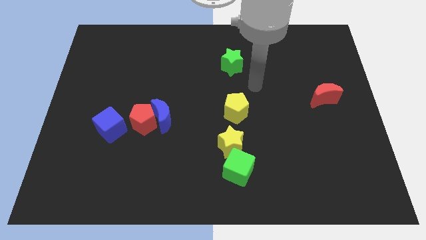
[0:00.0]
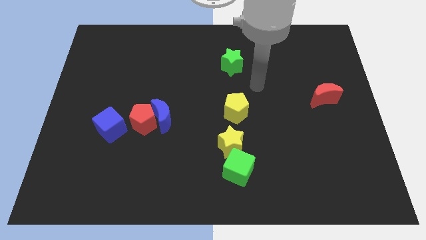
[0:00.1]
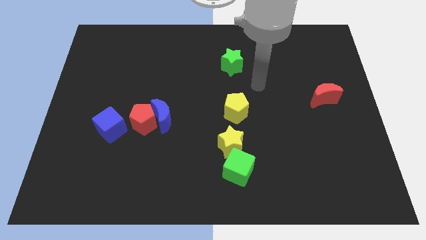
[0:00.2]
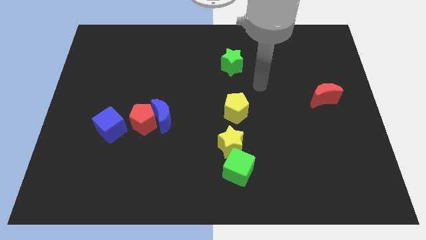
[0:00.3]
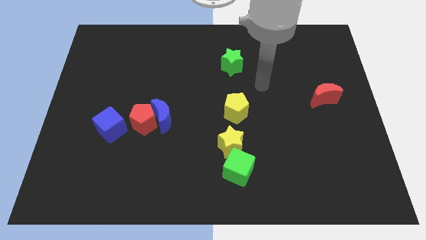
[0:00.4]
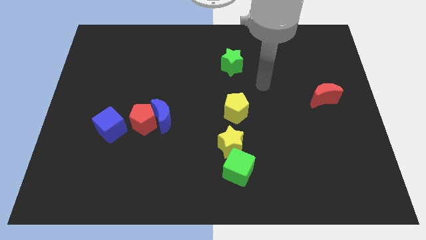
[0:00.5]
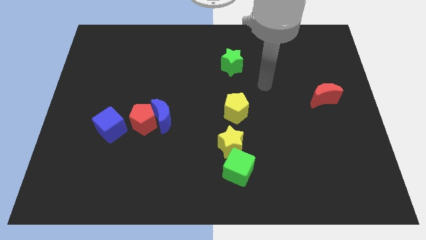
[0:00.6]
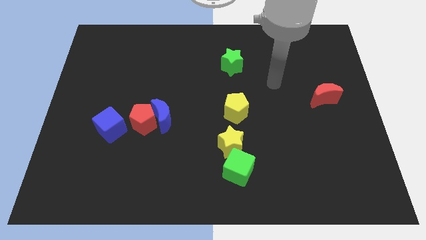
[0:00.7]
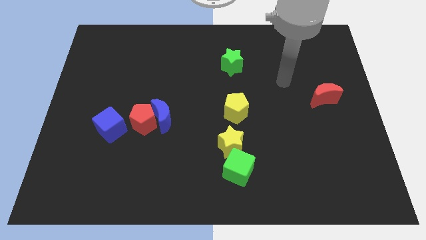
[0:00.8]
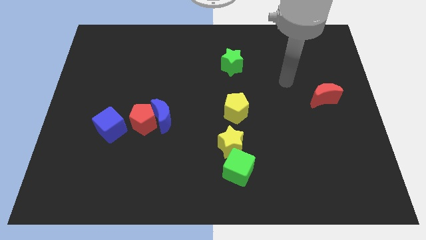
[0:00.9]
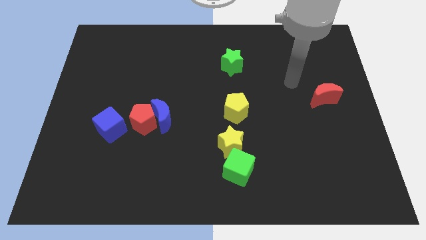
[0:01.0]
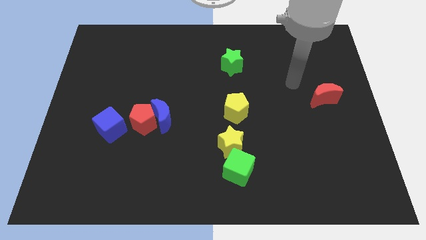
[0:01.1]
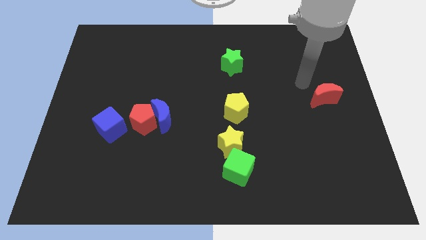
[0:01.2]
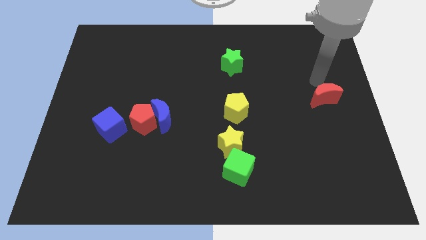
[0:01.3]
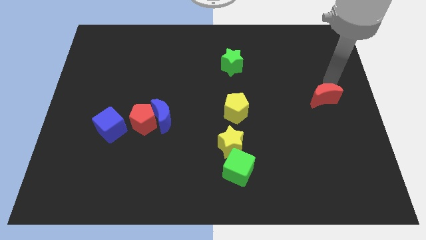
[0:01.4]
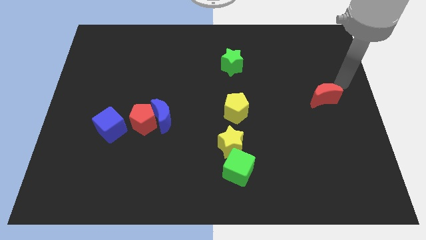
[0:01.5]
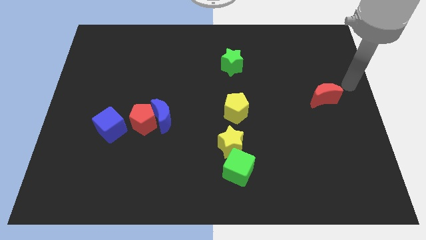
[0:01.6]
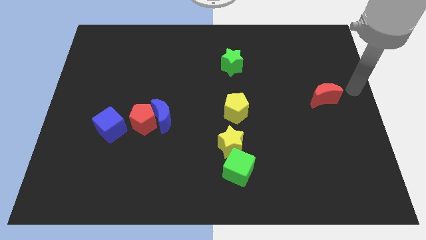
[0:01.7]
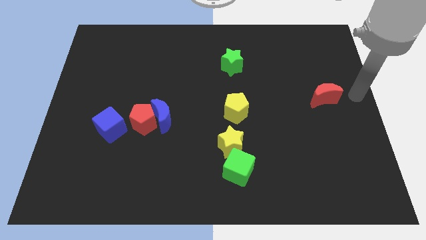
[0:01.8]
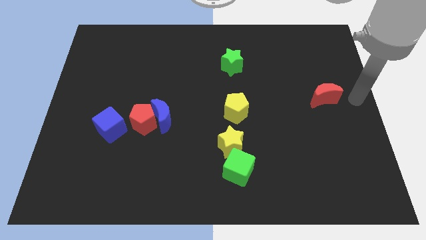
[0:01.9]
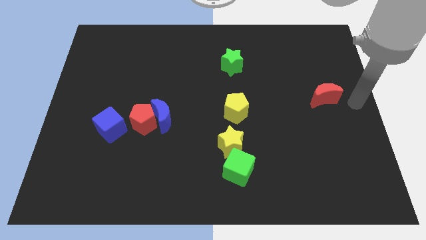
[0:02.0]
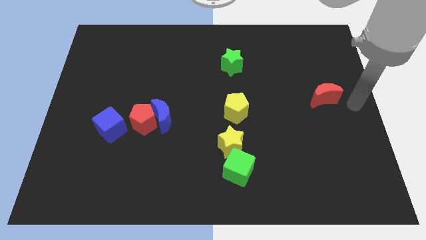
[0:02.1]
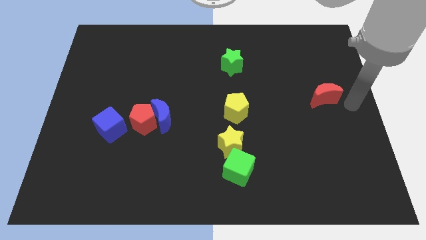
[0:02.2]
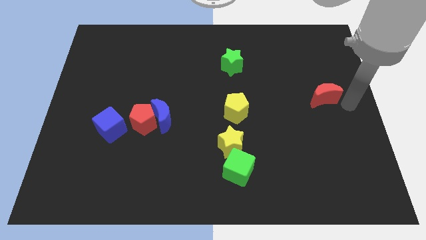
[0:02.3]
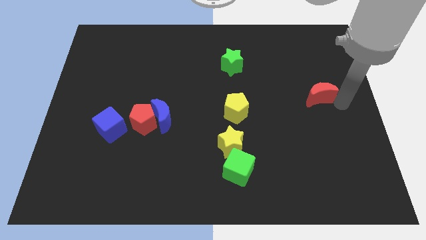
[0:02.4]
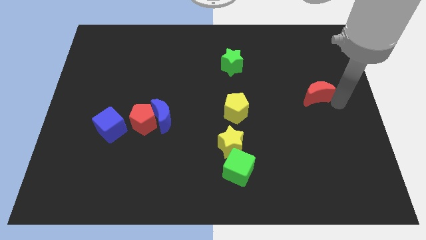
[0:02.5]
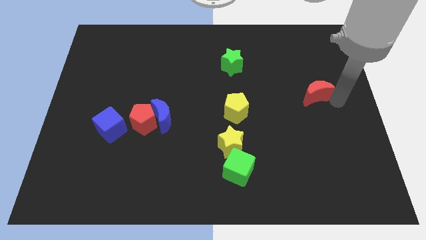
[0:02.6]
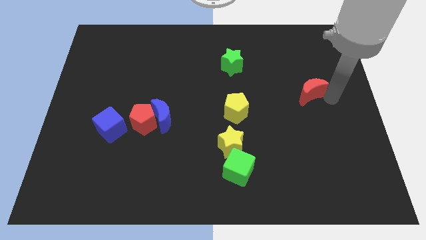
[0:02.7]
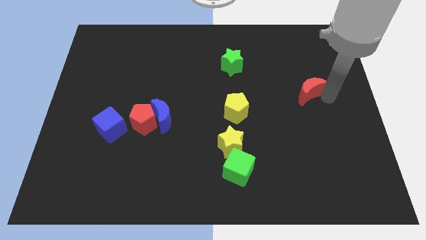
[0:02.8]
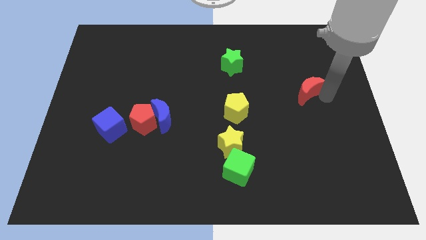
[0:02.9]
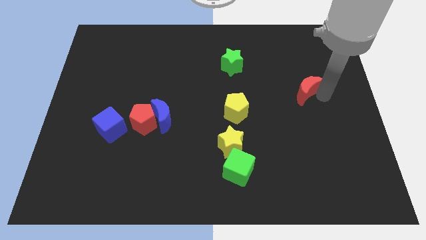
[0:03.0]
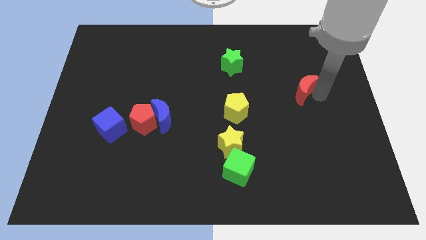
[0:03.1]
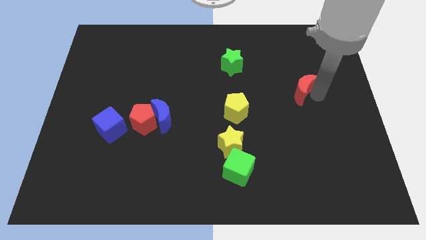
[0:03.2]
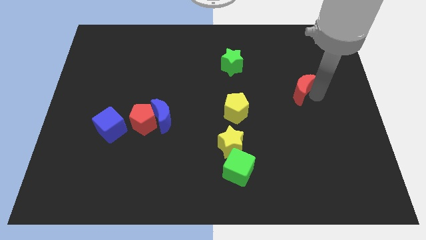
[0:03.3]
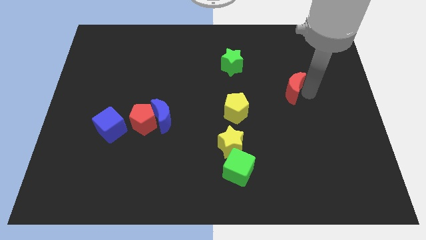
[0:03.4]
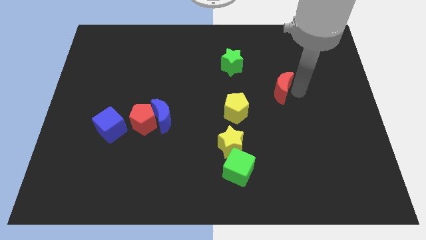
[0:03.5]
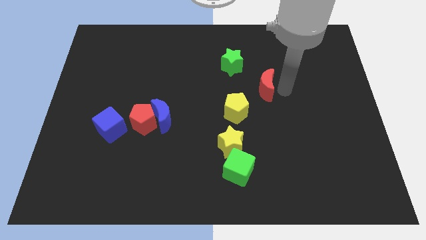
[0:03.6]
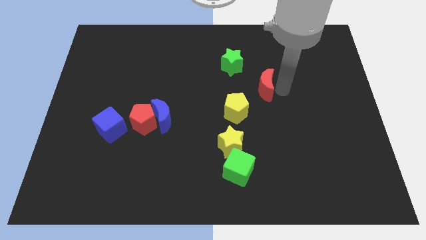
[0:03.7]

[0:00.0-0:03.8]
put the red crescent diagonally on the top right side of the yellow pentagon

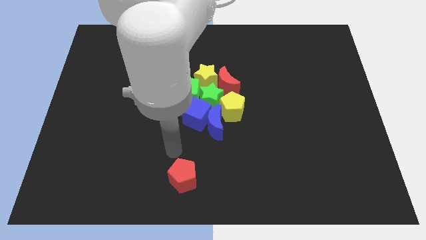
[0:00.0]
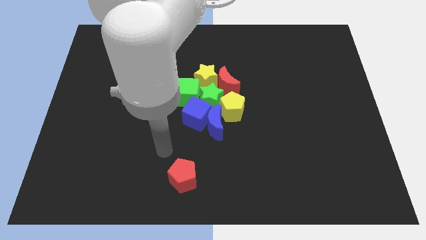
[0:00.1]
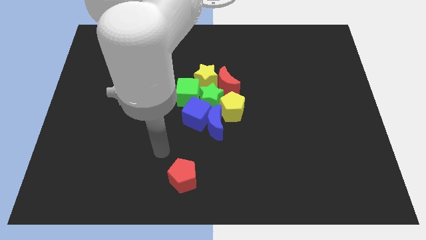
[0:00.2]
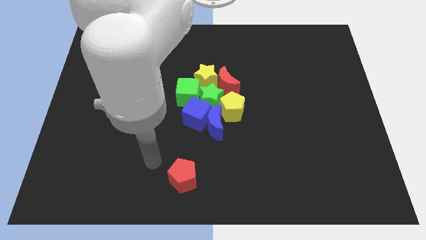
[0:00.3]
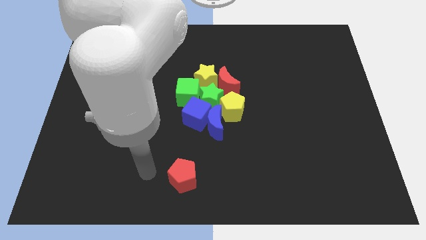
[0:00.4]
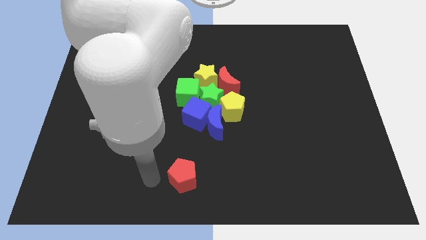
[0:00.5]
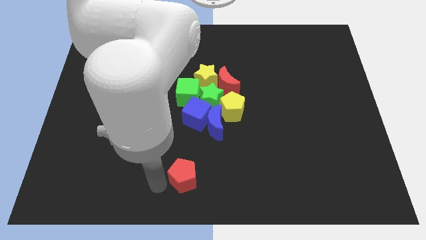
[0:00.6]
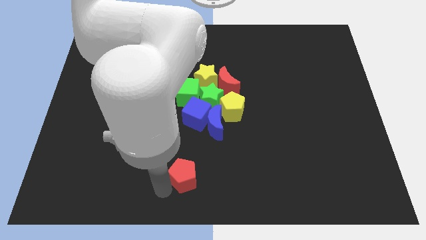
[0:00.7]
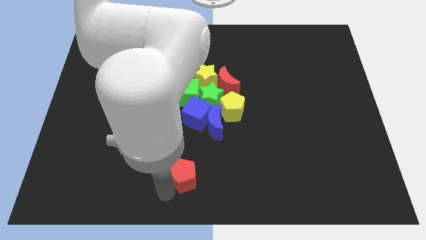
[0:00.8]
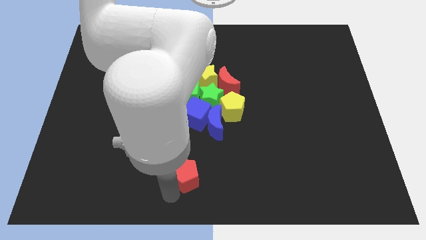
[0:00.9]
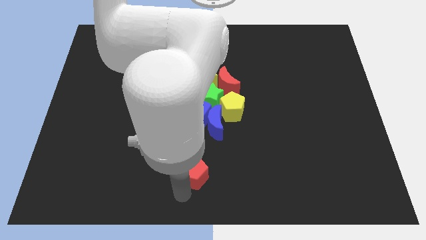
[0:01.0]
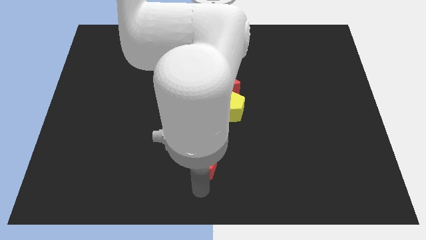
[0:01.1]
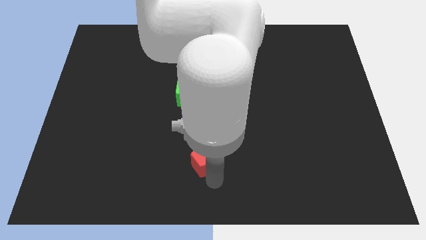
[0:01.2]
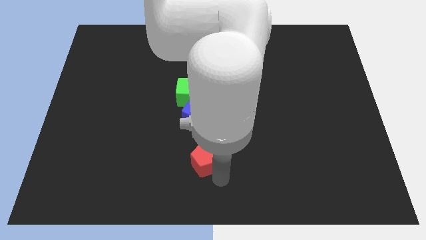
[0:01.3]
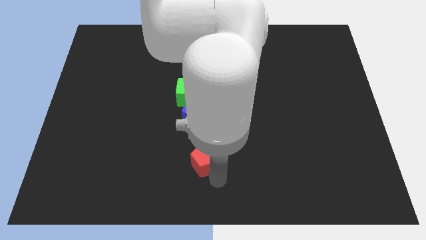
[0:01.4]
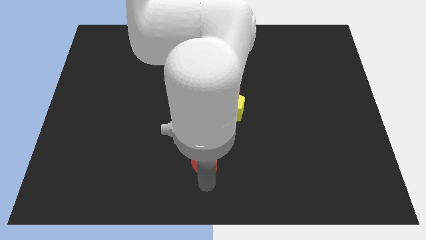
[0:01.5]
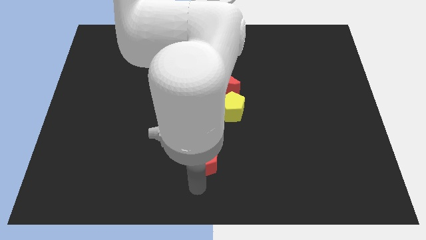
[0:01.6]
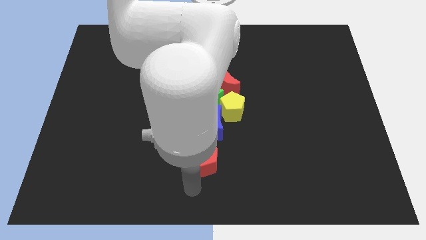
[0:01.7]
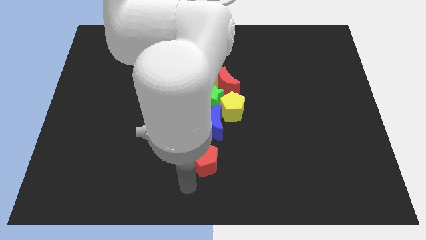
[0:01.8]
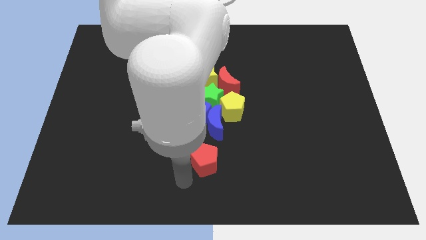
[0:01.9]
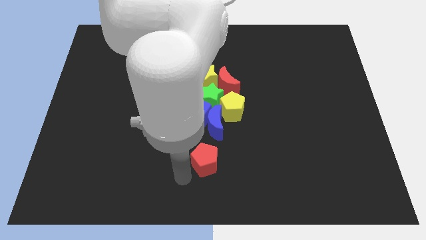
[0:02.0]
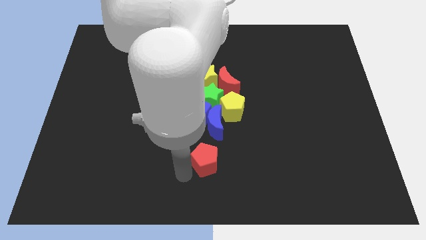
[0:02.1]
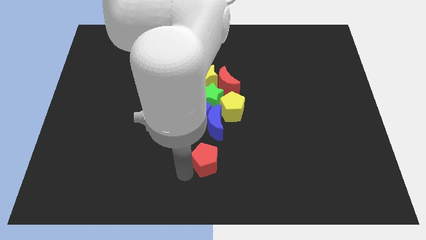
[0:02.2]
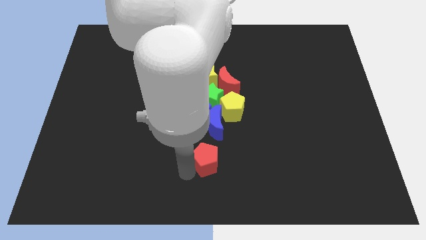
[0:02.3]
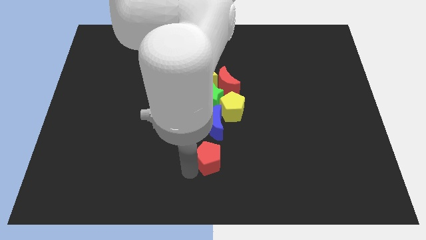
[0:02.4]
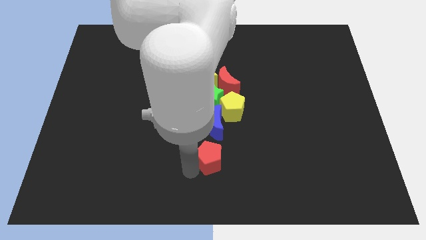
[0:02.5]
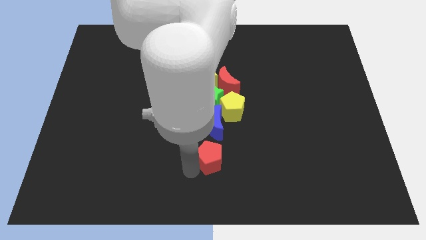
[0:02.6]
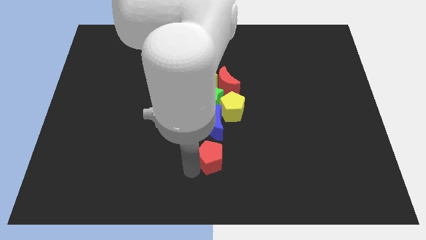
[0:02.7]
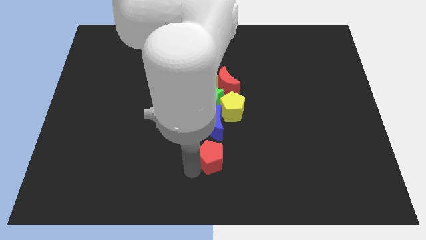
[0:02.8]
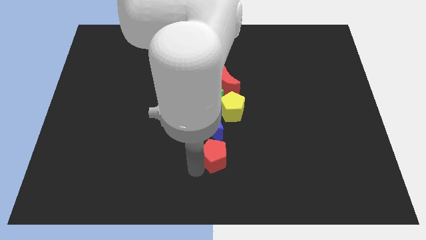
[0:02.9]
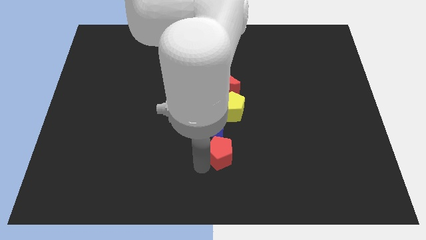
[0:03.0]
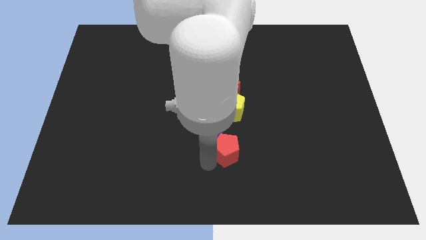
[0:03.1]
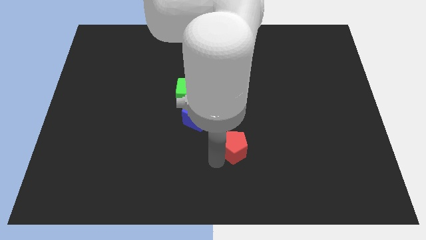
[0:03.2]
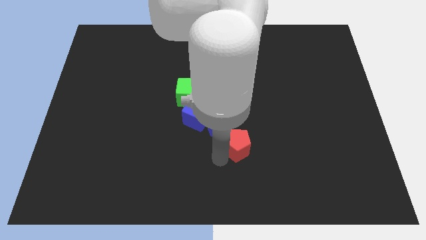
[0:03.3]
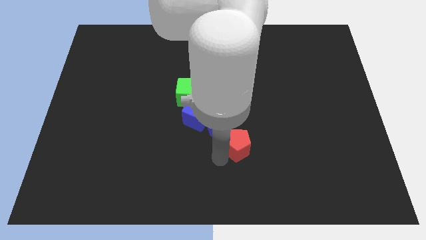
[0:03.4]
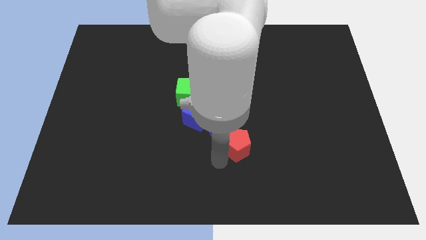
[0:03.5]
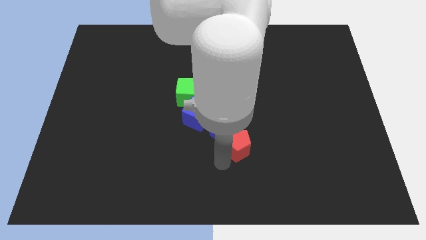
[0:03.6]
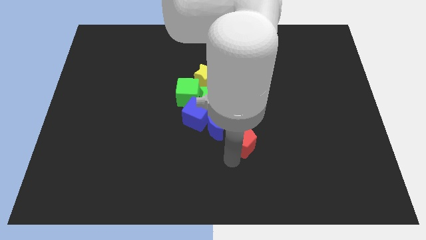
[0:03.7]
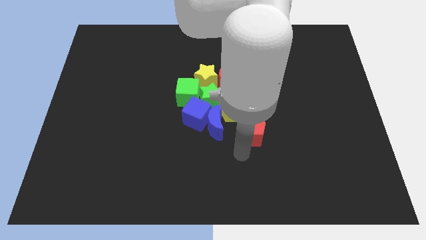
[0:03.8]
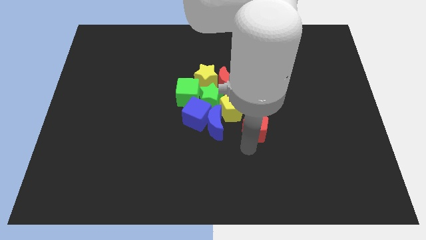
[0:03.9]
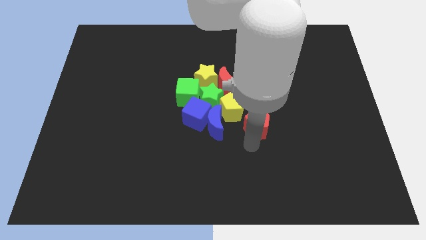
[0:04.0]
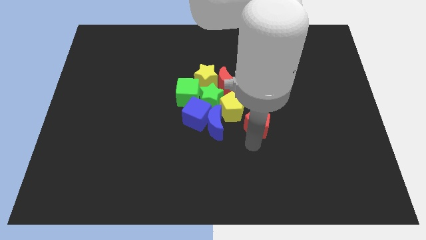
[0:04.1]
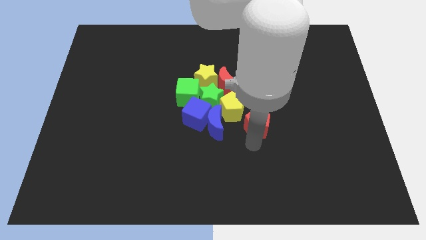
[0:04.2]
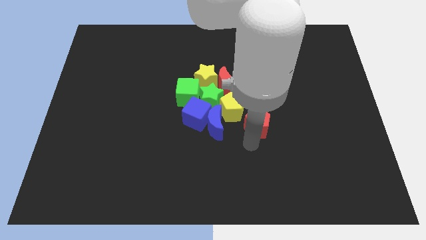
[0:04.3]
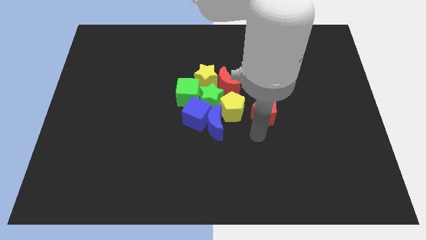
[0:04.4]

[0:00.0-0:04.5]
place the red pentagon to the right side of blue crescent

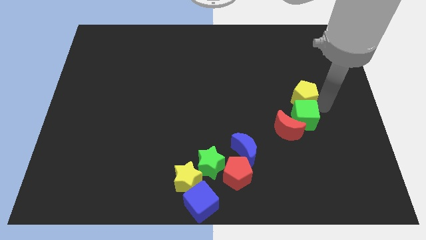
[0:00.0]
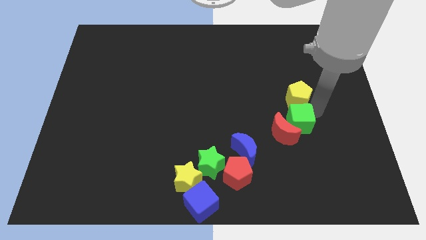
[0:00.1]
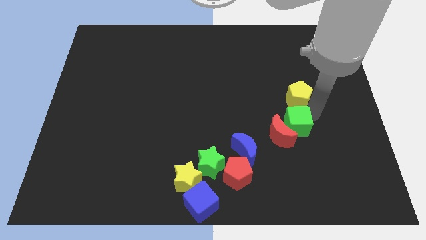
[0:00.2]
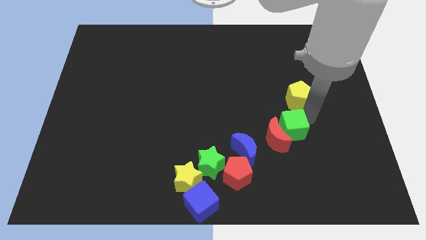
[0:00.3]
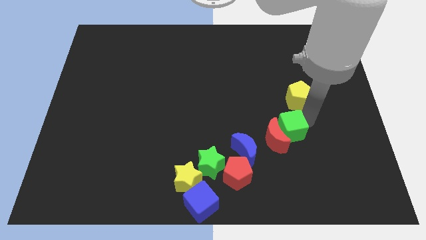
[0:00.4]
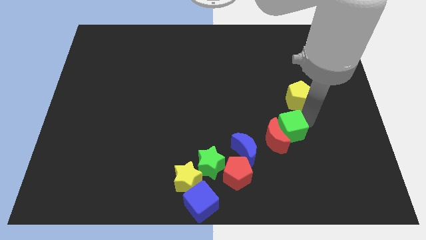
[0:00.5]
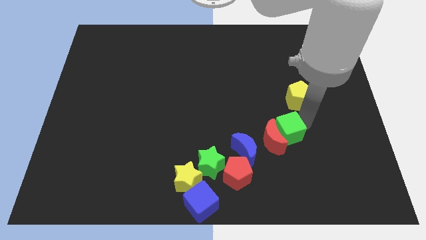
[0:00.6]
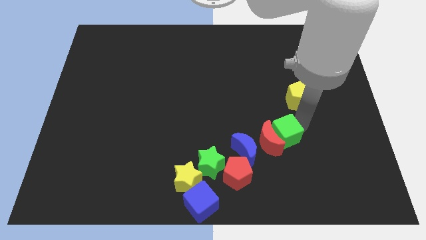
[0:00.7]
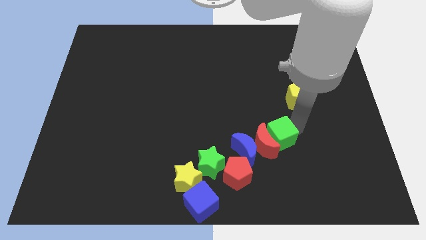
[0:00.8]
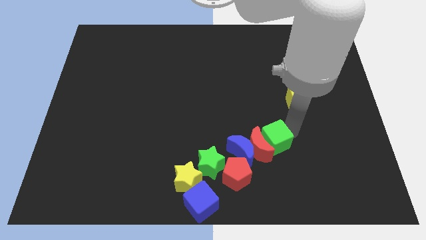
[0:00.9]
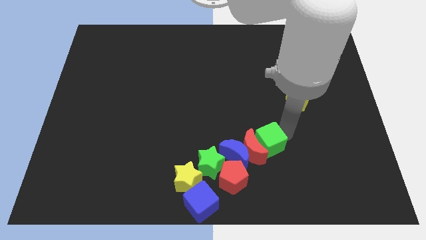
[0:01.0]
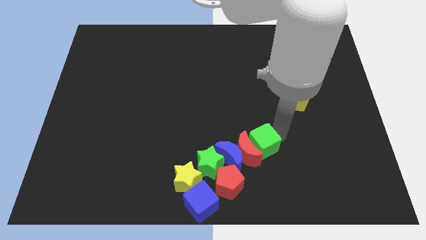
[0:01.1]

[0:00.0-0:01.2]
push green cube in to red crescent
